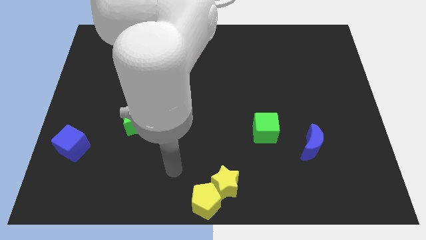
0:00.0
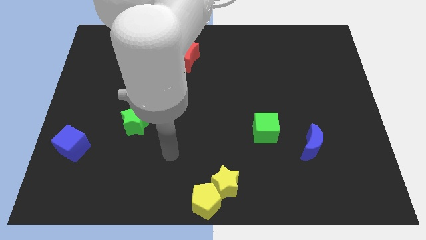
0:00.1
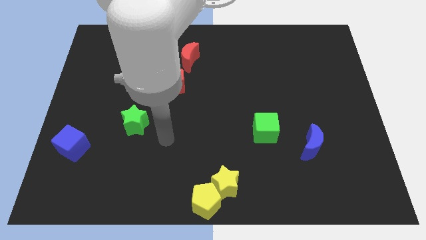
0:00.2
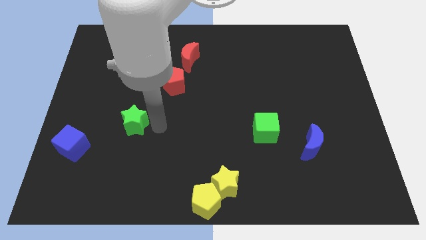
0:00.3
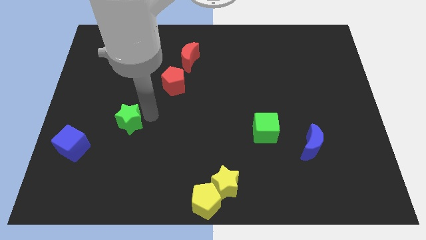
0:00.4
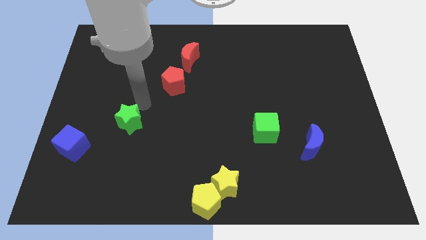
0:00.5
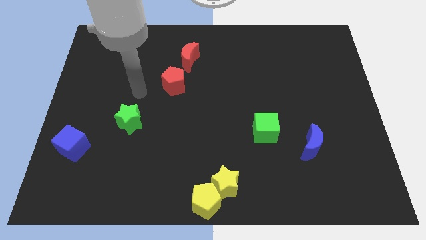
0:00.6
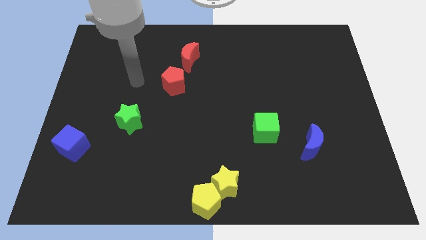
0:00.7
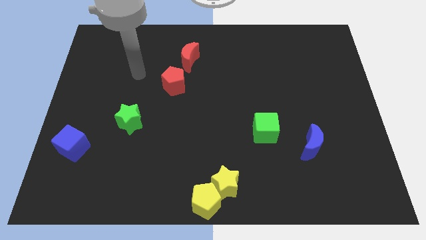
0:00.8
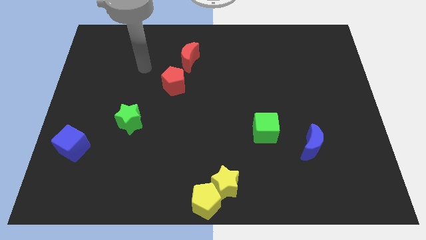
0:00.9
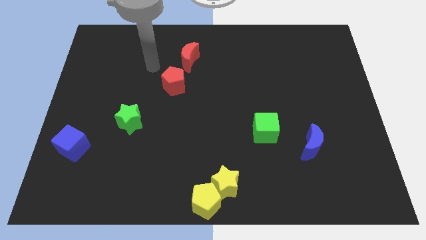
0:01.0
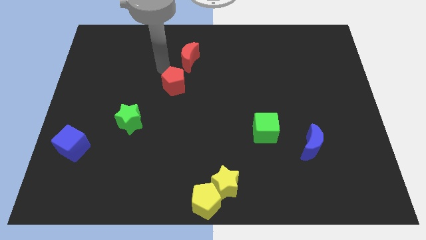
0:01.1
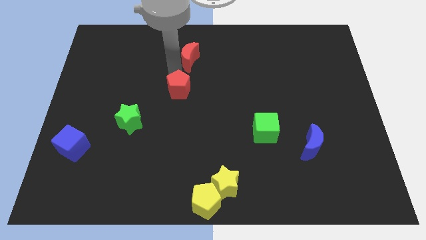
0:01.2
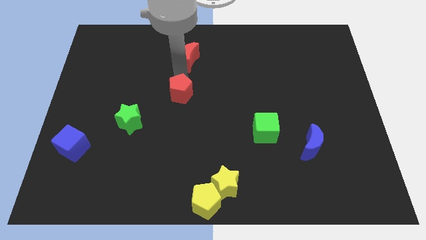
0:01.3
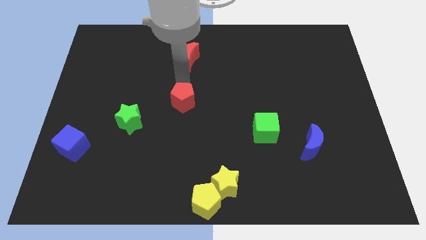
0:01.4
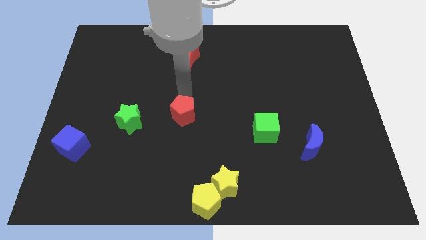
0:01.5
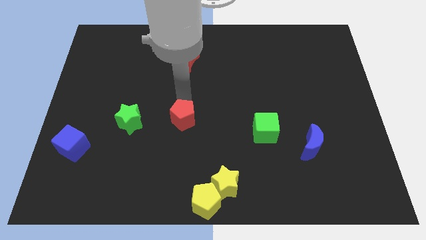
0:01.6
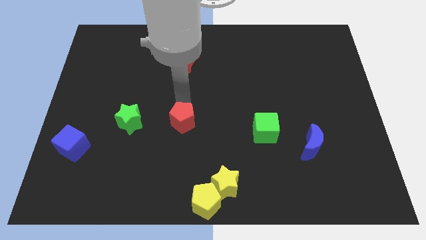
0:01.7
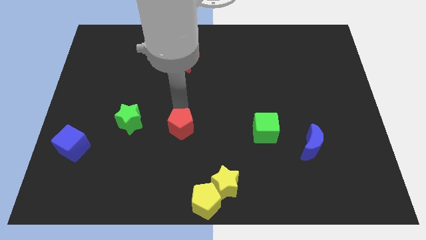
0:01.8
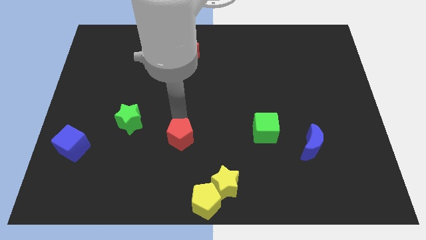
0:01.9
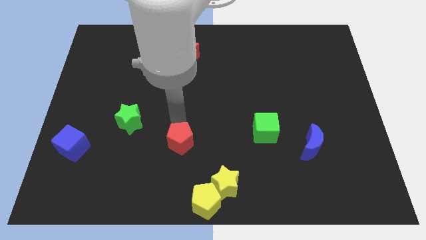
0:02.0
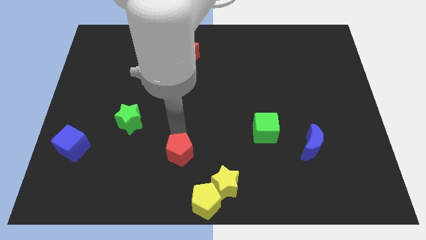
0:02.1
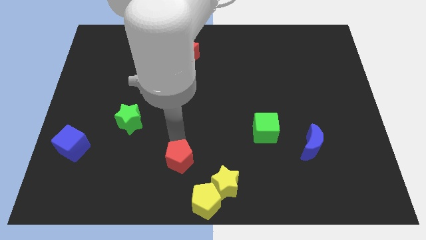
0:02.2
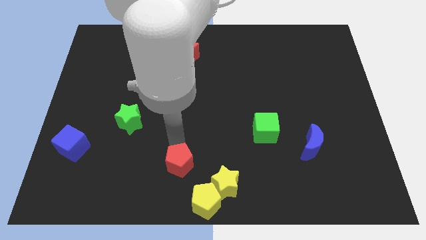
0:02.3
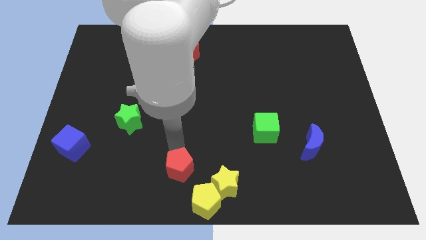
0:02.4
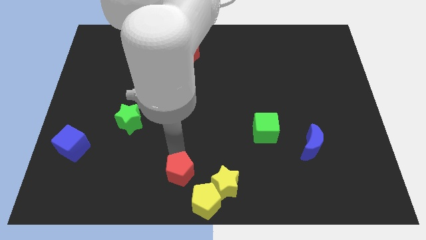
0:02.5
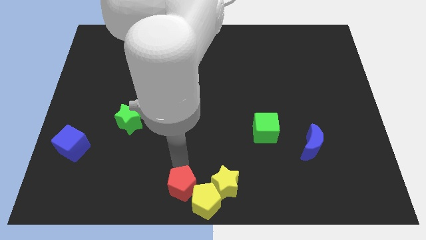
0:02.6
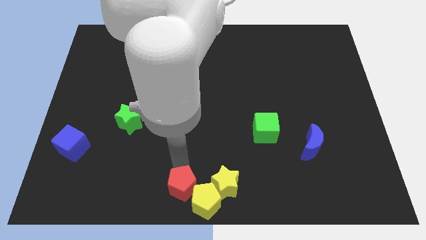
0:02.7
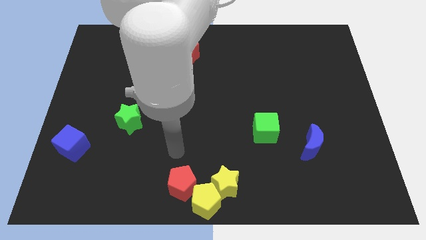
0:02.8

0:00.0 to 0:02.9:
bring the red pentagon close to the yellow pentagon

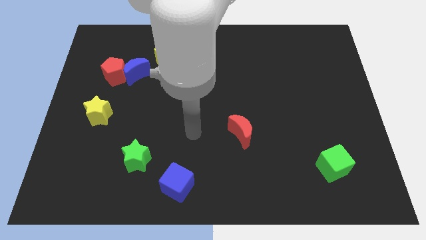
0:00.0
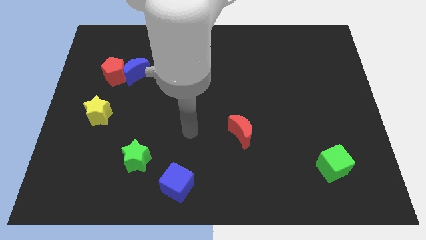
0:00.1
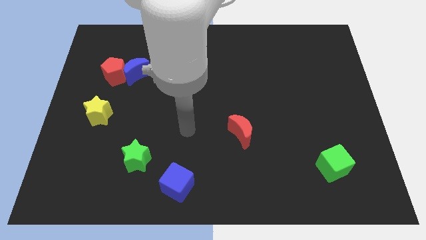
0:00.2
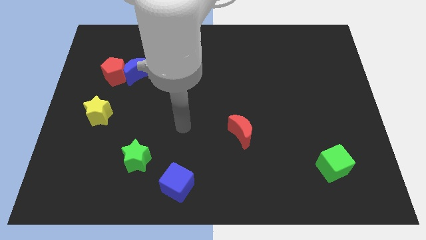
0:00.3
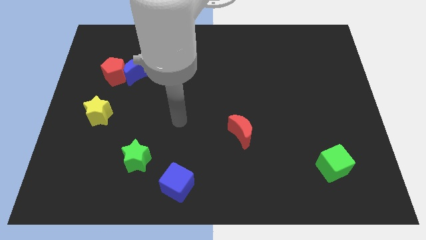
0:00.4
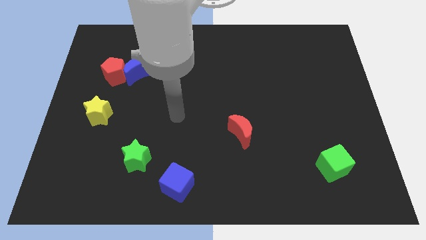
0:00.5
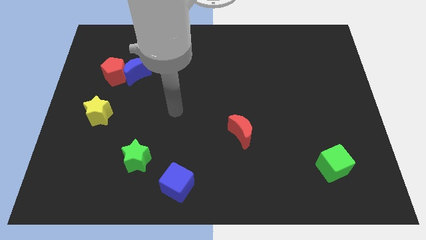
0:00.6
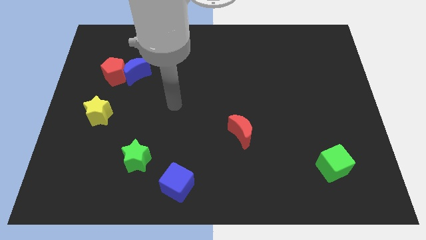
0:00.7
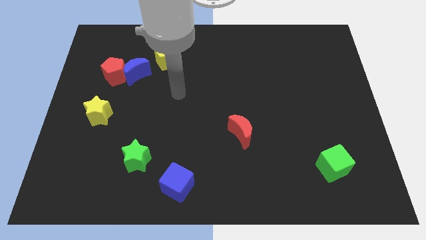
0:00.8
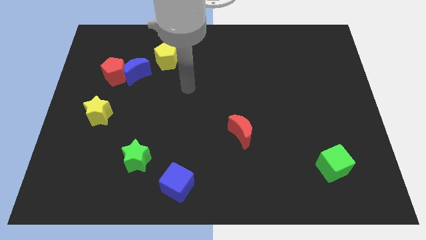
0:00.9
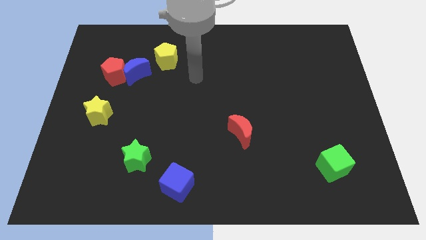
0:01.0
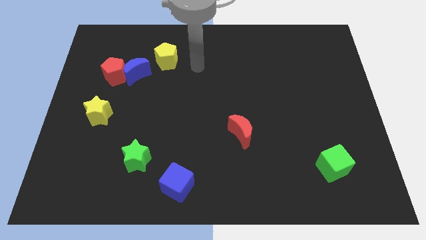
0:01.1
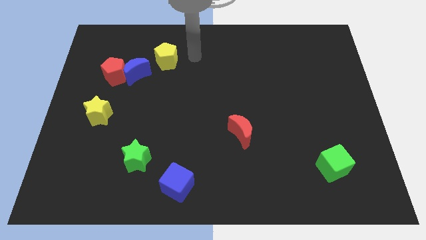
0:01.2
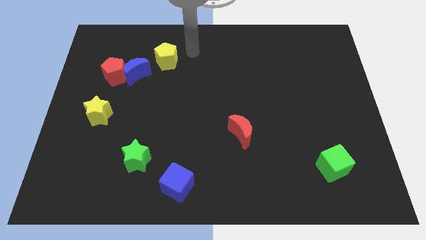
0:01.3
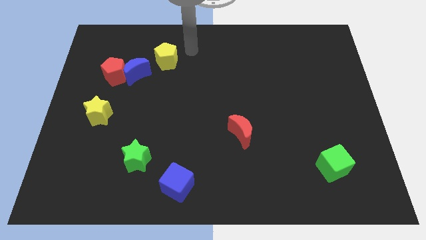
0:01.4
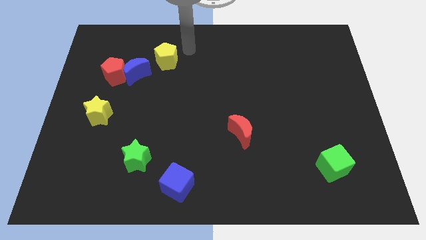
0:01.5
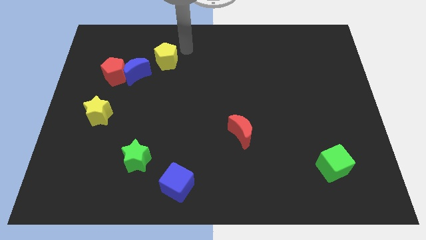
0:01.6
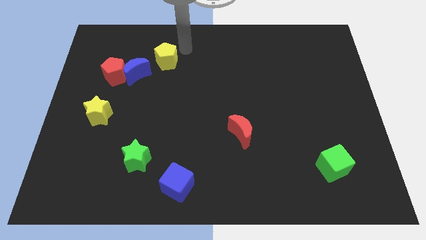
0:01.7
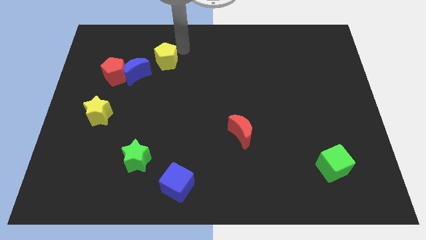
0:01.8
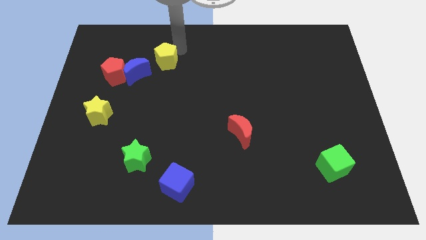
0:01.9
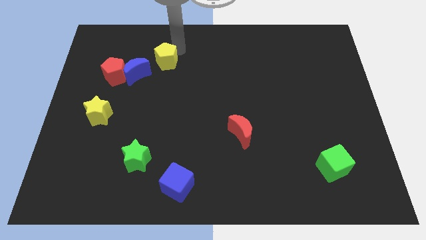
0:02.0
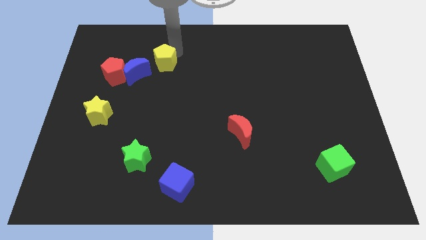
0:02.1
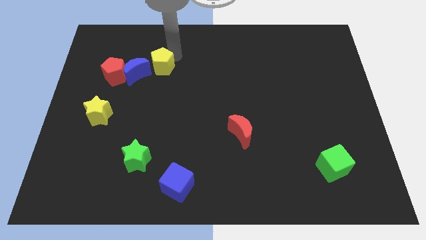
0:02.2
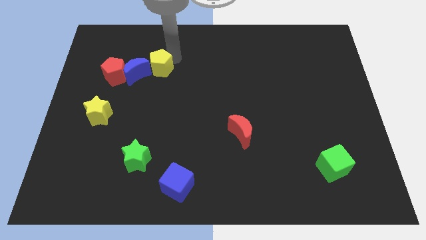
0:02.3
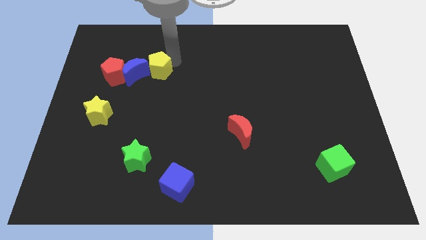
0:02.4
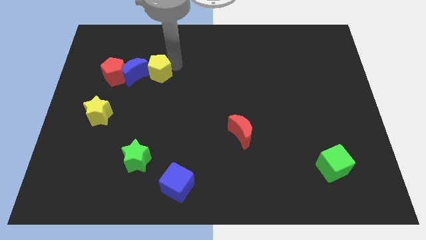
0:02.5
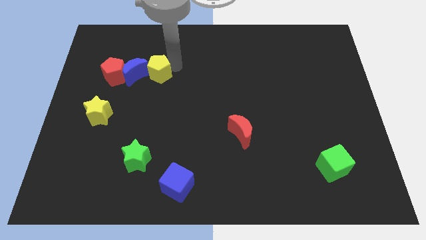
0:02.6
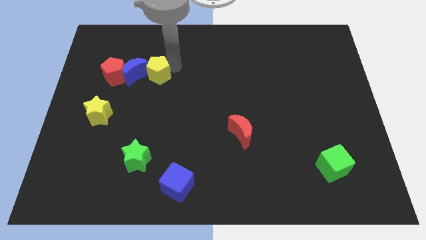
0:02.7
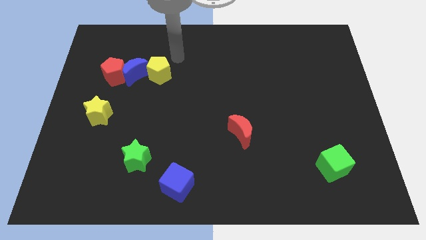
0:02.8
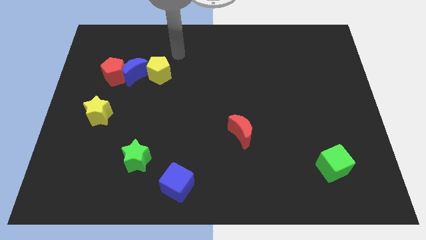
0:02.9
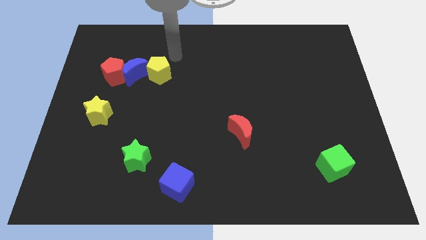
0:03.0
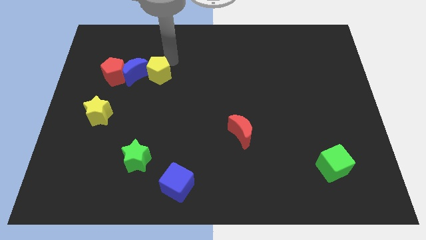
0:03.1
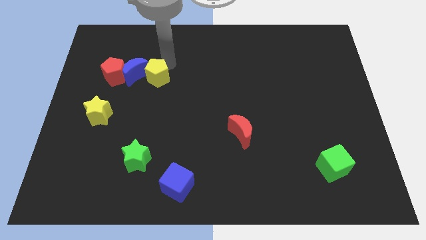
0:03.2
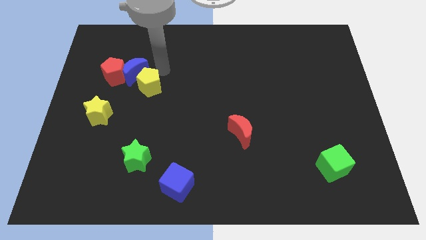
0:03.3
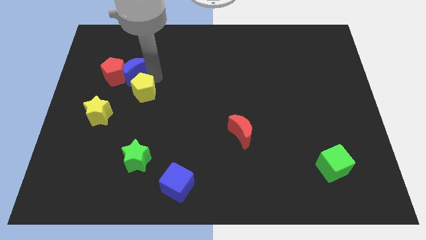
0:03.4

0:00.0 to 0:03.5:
place yellow pentagon to the bottom of blue moon

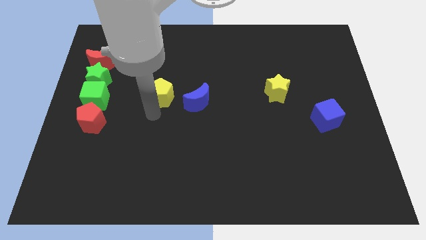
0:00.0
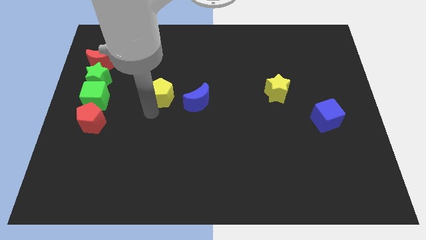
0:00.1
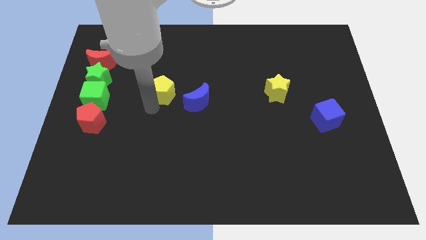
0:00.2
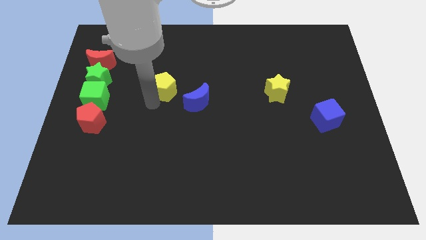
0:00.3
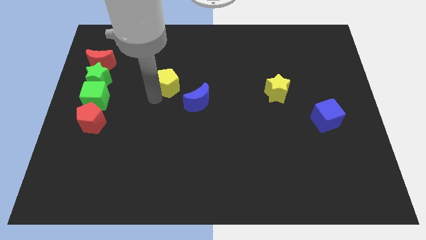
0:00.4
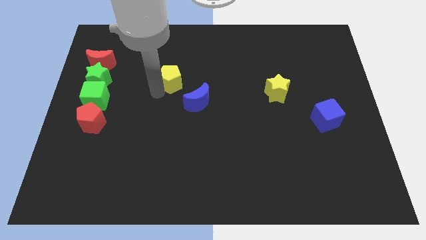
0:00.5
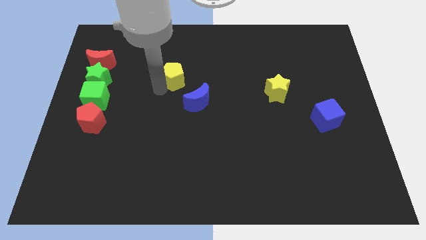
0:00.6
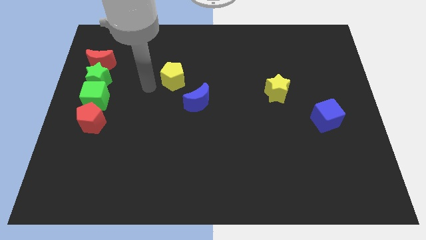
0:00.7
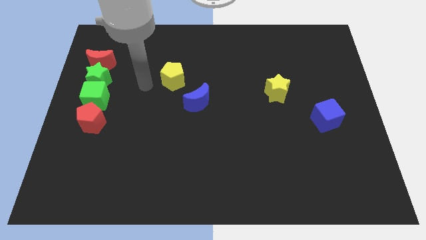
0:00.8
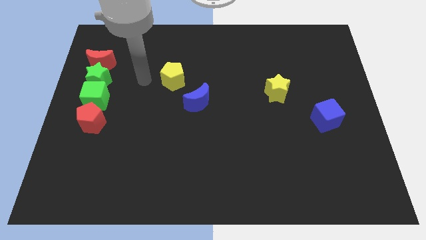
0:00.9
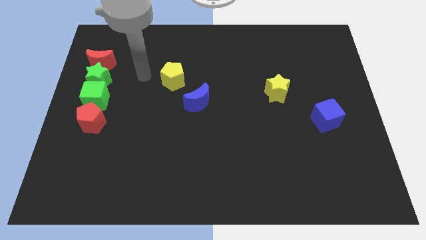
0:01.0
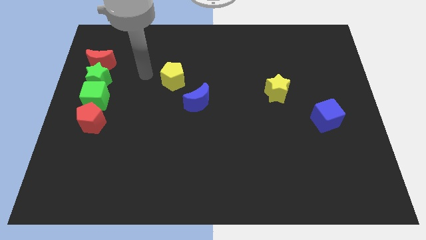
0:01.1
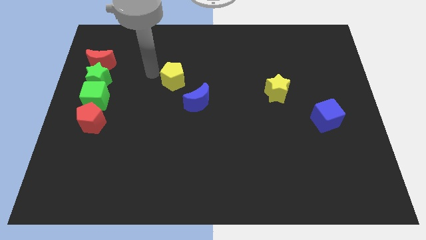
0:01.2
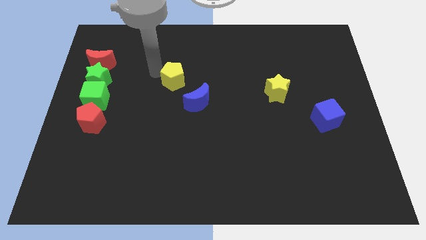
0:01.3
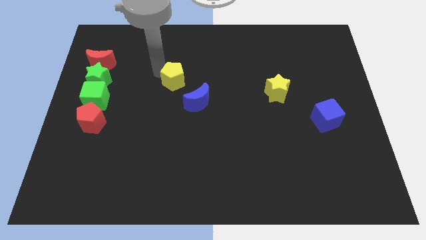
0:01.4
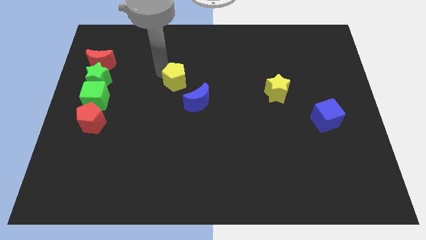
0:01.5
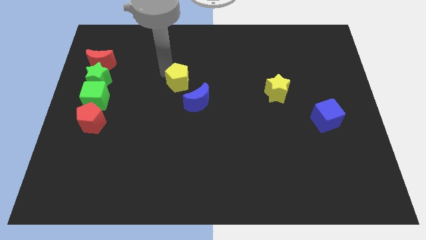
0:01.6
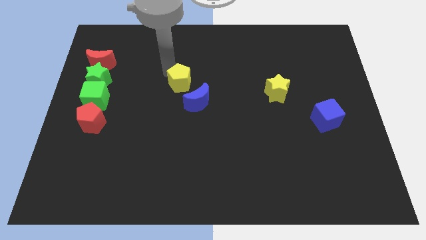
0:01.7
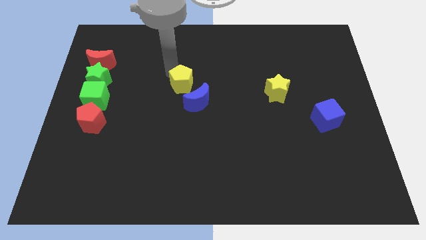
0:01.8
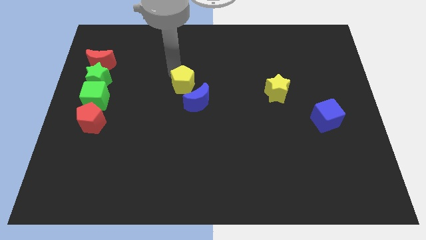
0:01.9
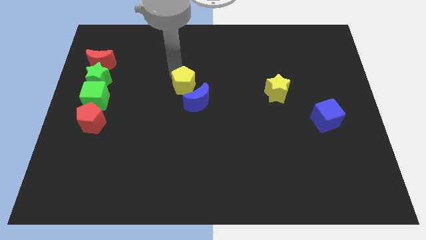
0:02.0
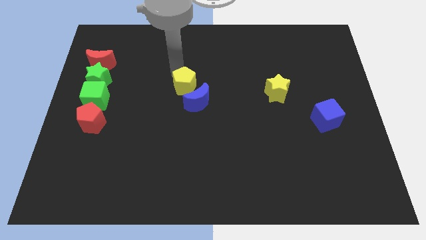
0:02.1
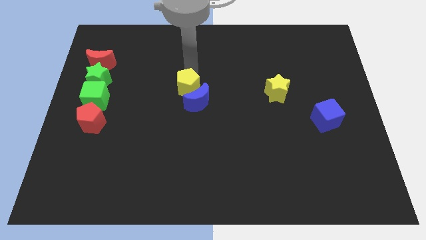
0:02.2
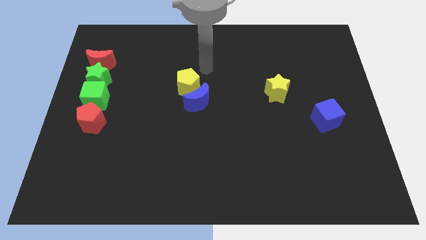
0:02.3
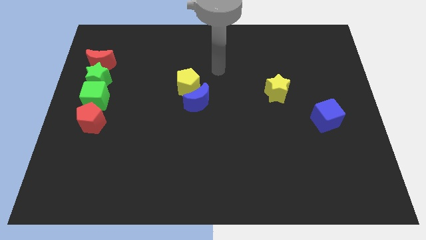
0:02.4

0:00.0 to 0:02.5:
place yellow pentagon above blue crescent

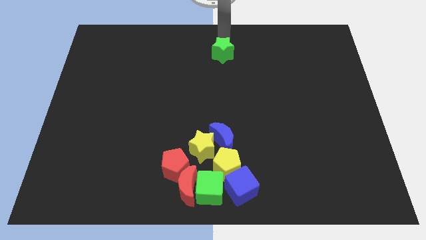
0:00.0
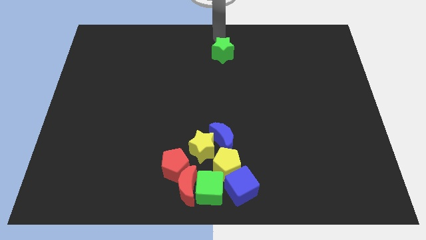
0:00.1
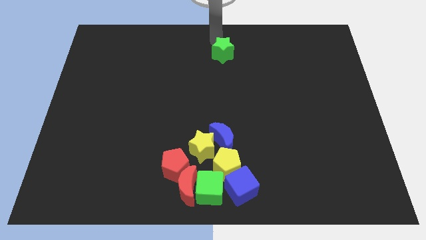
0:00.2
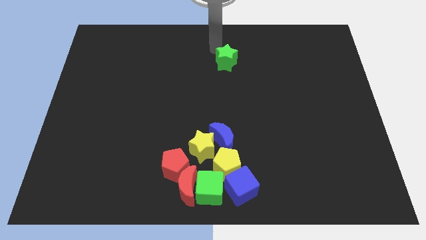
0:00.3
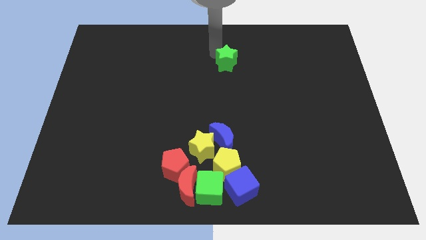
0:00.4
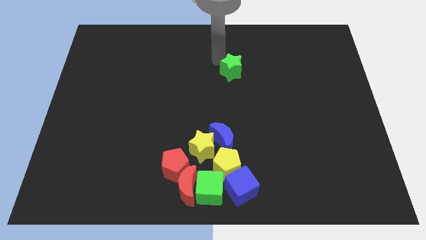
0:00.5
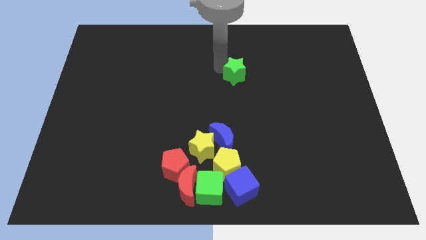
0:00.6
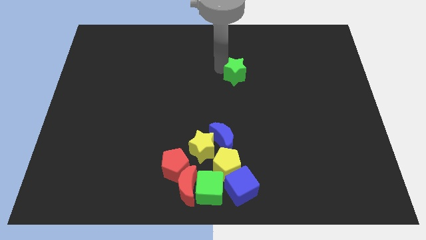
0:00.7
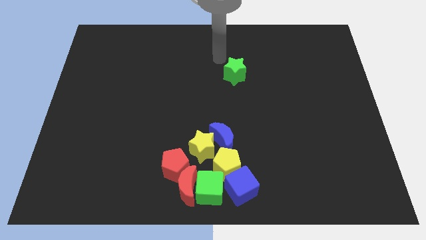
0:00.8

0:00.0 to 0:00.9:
push the green star to the cener
